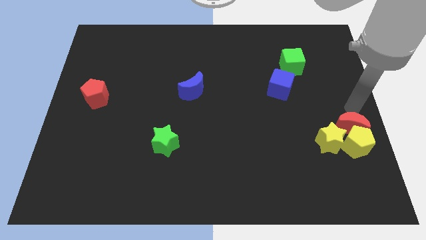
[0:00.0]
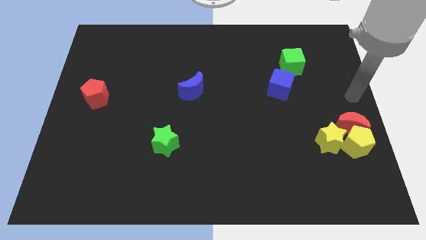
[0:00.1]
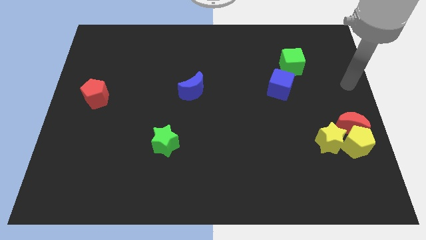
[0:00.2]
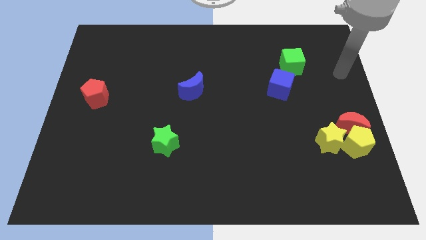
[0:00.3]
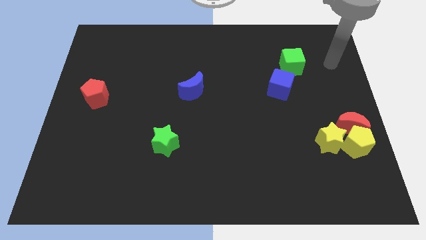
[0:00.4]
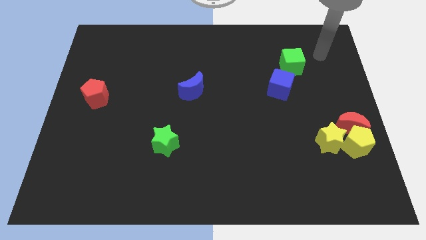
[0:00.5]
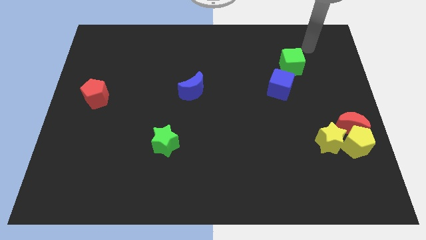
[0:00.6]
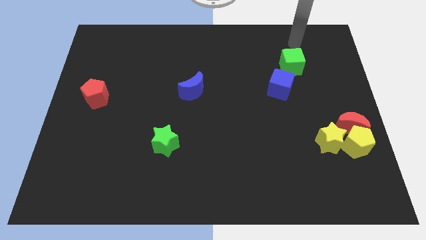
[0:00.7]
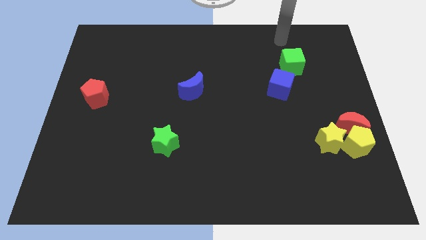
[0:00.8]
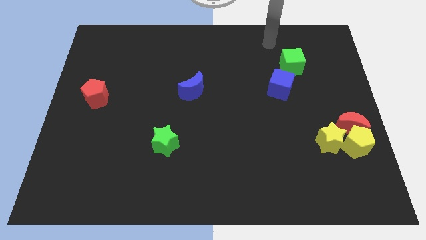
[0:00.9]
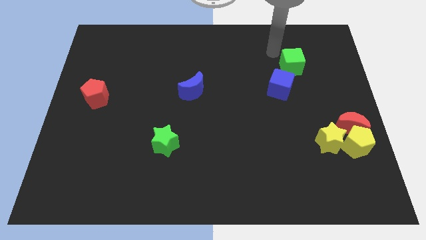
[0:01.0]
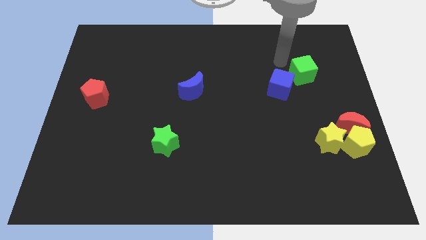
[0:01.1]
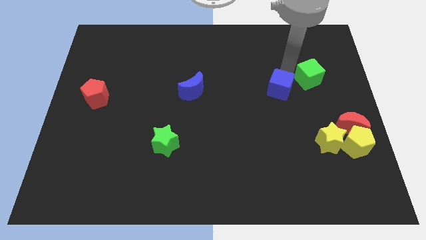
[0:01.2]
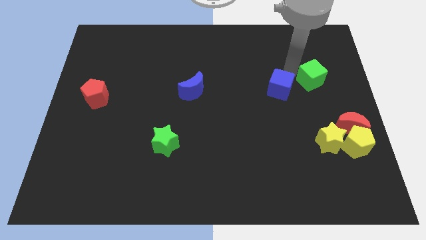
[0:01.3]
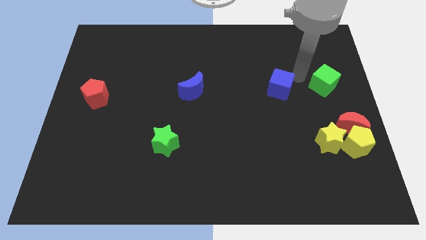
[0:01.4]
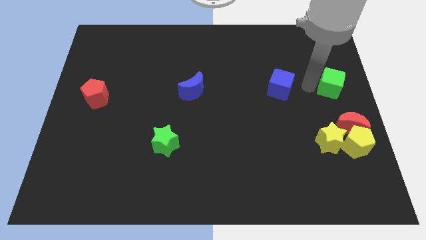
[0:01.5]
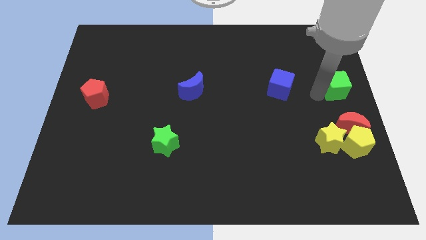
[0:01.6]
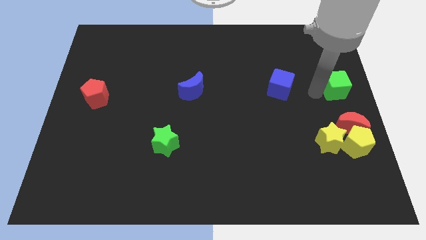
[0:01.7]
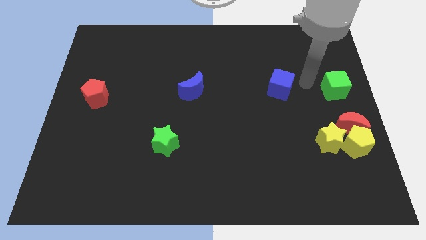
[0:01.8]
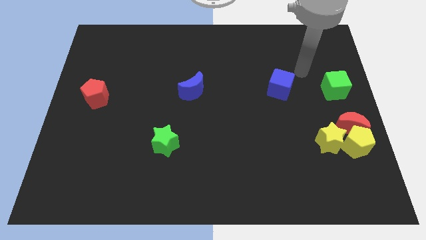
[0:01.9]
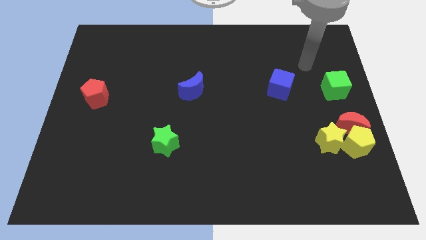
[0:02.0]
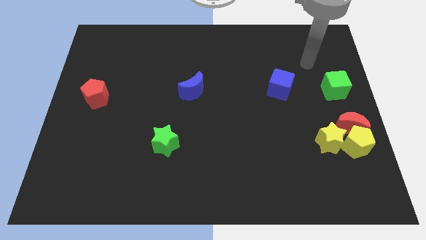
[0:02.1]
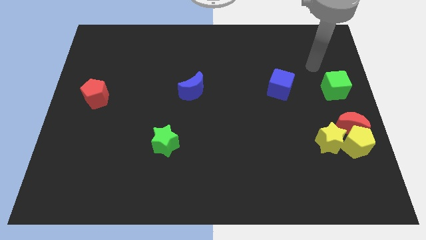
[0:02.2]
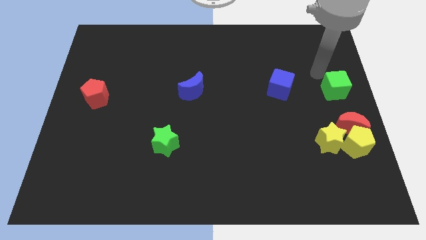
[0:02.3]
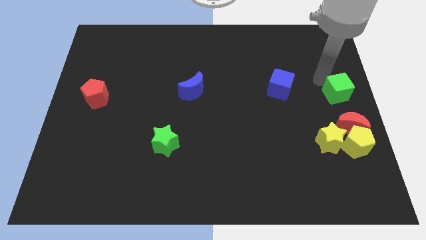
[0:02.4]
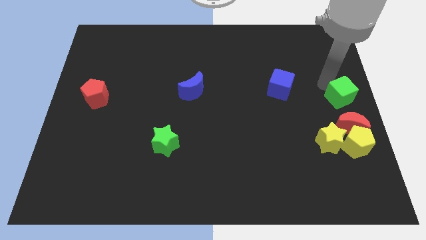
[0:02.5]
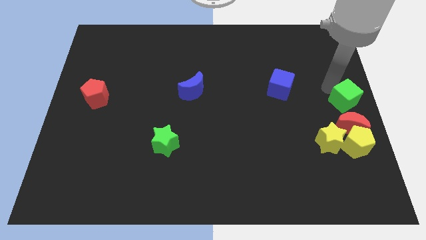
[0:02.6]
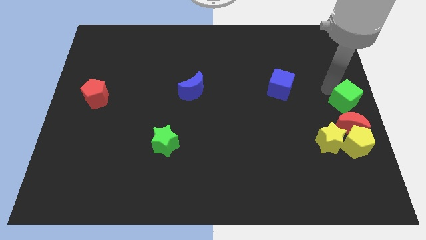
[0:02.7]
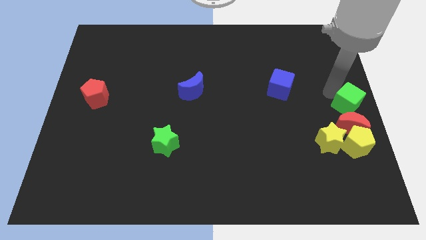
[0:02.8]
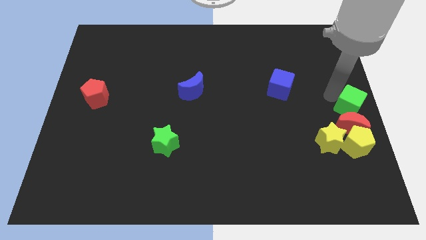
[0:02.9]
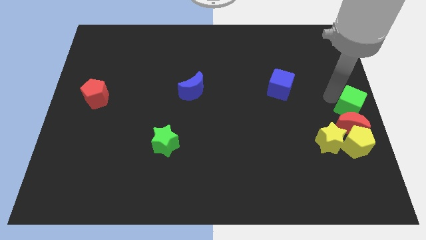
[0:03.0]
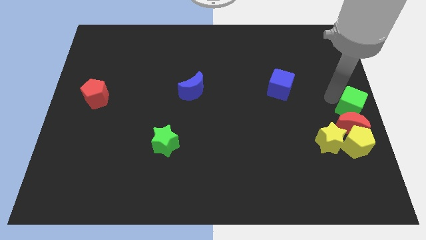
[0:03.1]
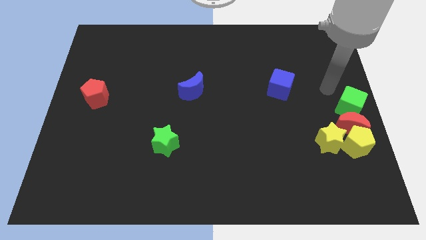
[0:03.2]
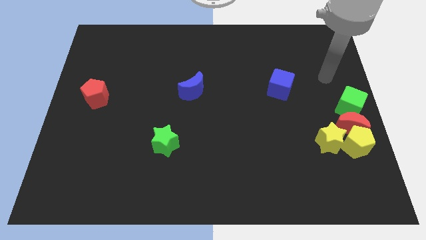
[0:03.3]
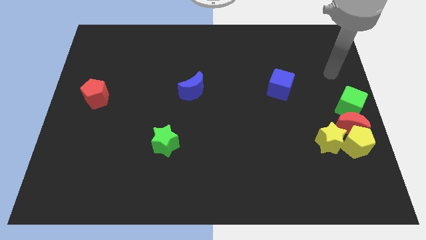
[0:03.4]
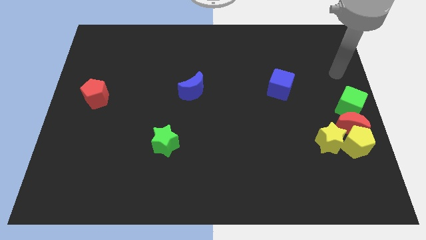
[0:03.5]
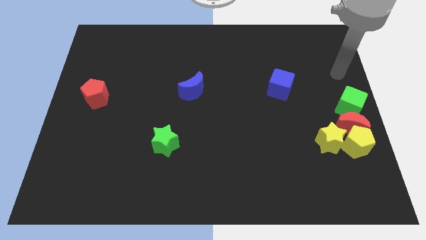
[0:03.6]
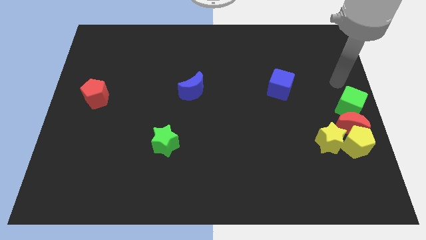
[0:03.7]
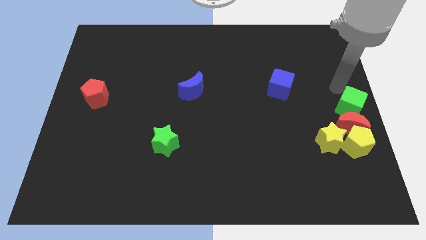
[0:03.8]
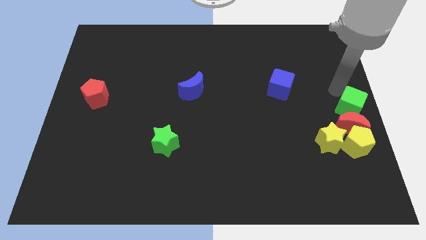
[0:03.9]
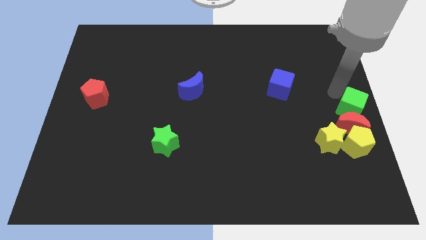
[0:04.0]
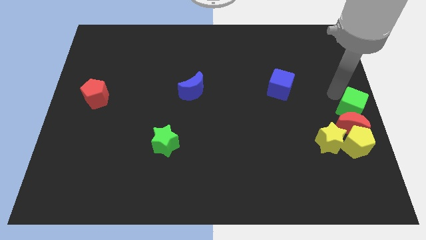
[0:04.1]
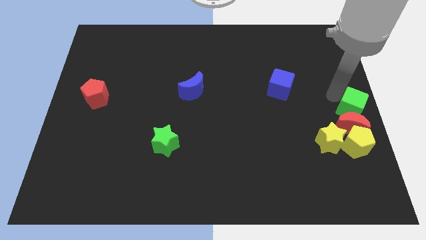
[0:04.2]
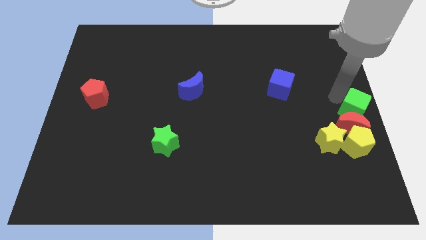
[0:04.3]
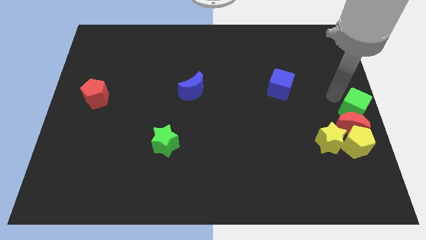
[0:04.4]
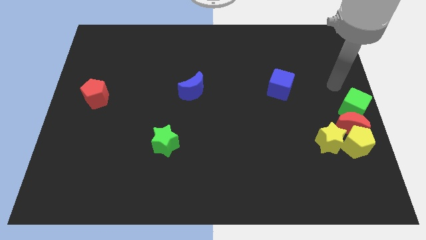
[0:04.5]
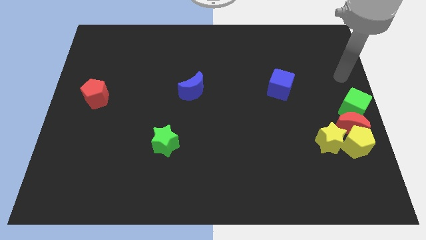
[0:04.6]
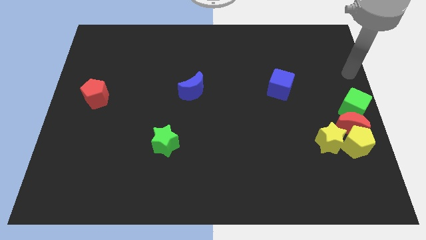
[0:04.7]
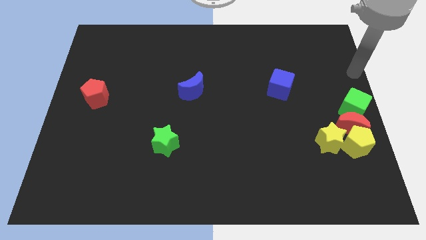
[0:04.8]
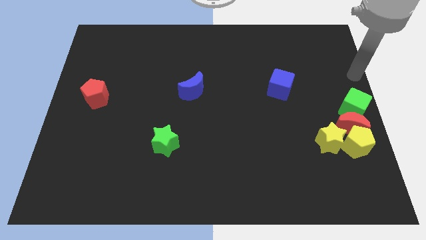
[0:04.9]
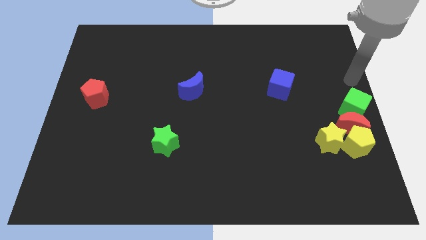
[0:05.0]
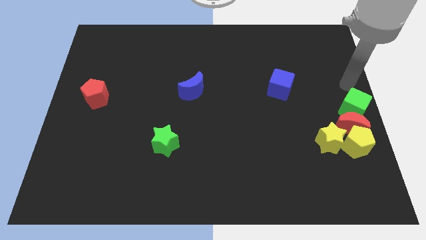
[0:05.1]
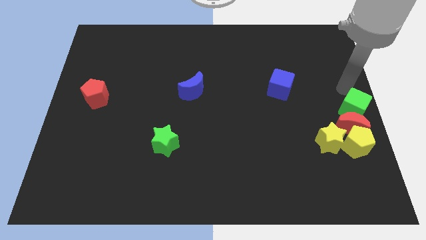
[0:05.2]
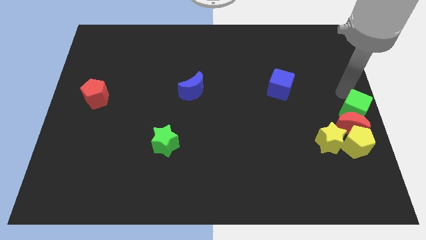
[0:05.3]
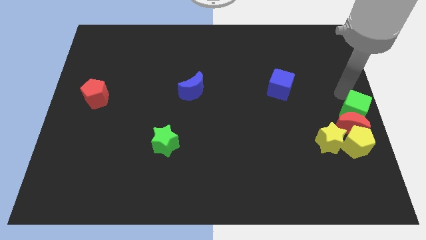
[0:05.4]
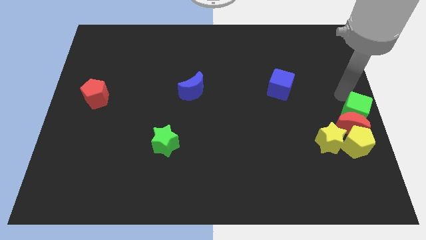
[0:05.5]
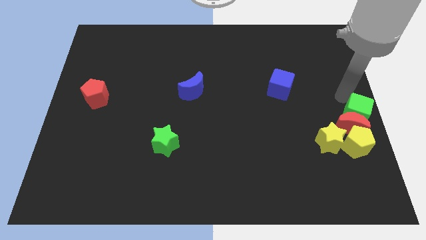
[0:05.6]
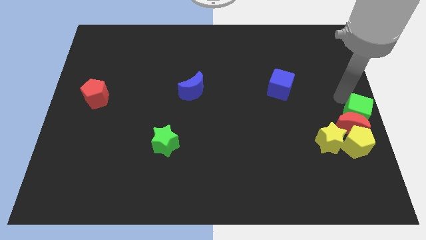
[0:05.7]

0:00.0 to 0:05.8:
slide the green cube into the top side of the red crescent

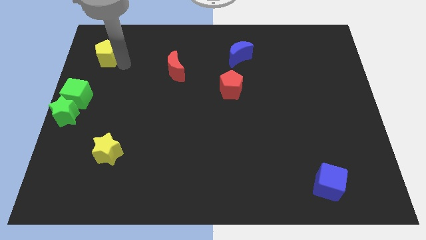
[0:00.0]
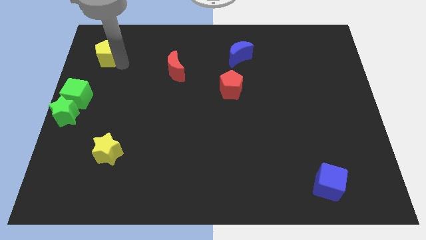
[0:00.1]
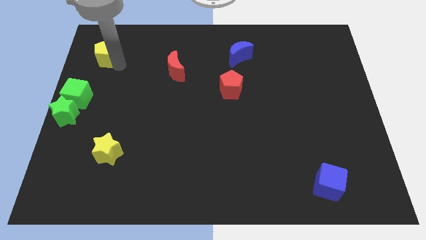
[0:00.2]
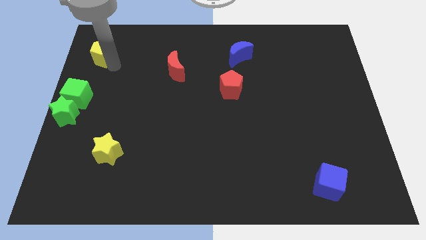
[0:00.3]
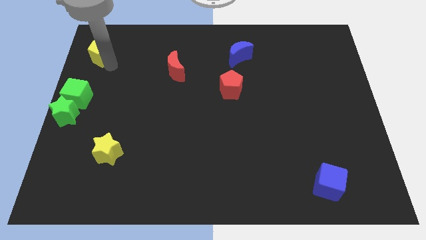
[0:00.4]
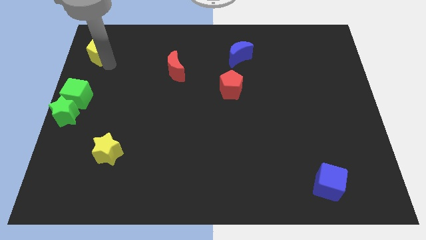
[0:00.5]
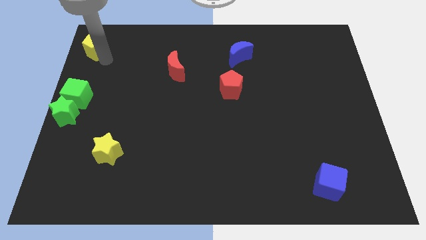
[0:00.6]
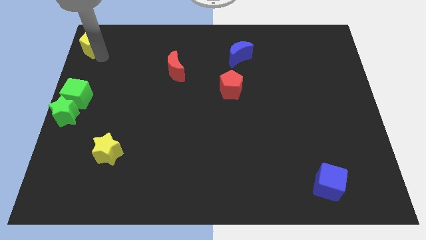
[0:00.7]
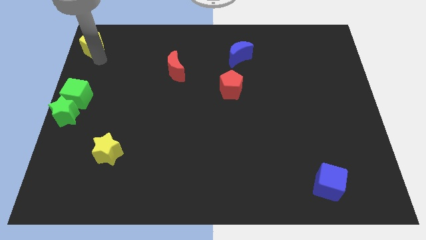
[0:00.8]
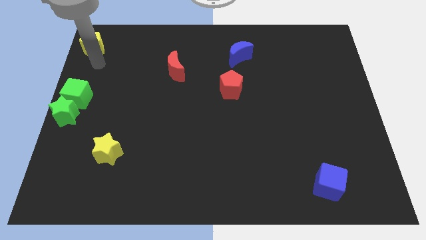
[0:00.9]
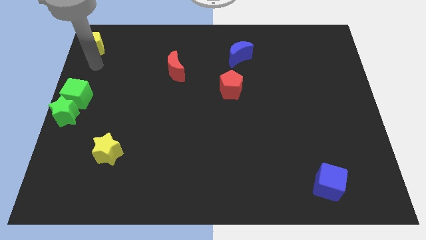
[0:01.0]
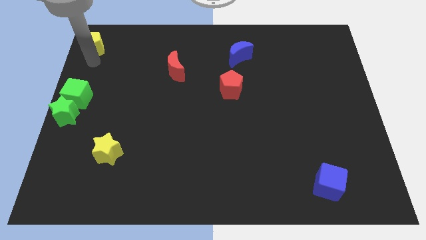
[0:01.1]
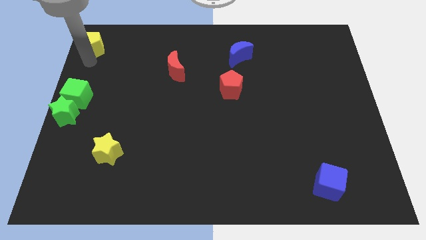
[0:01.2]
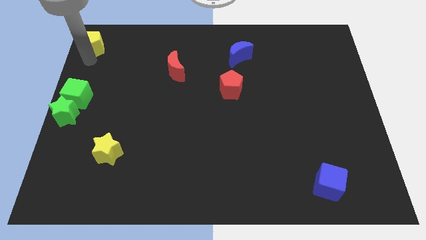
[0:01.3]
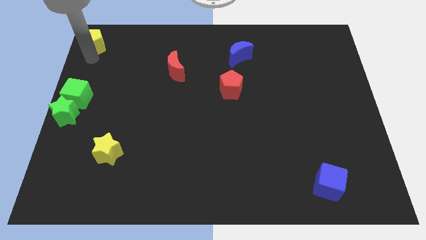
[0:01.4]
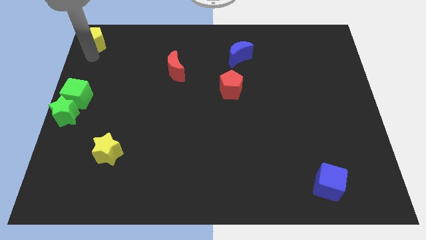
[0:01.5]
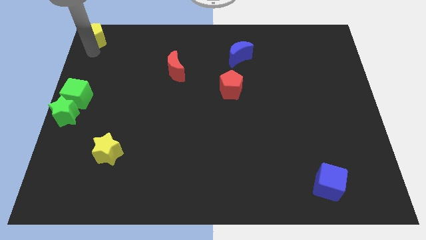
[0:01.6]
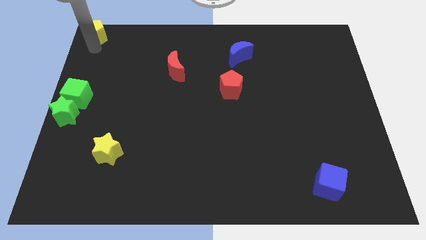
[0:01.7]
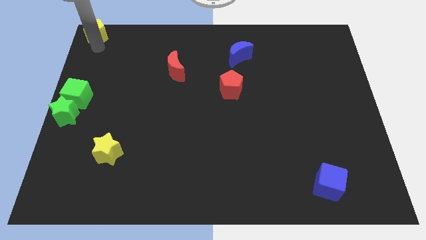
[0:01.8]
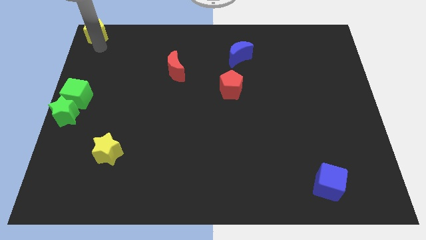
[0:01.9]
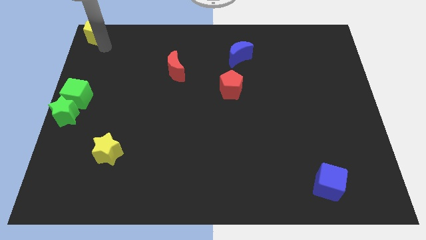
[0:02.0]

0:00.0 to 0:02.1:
place the yellow pentagon at the top left corner of the board

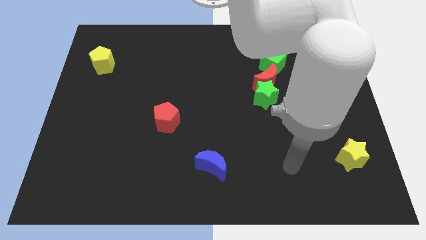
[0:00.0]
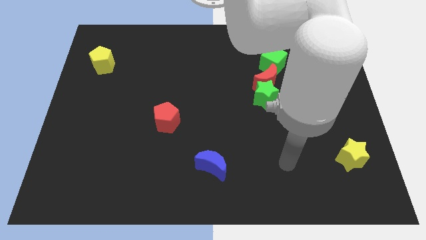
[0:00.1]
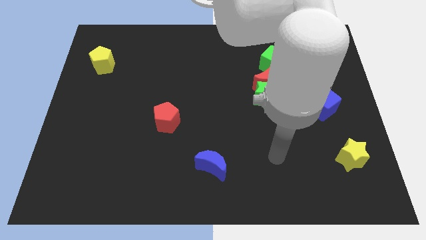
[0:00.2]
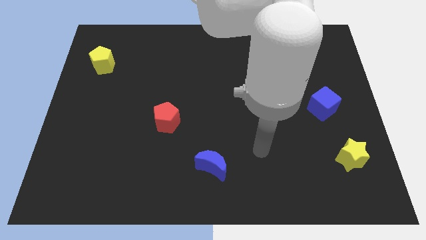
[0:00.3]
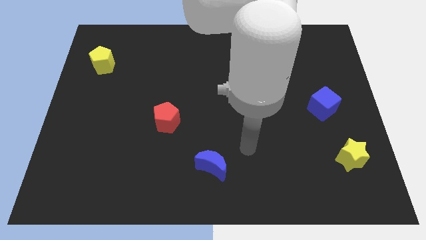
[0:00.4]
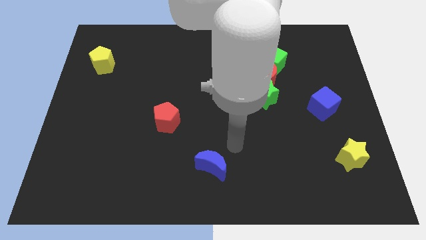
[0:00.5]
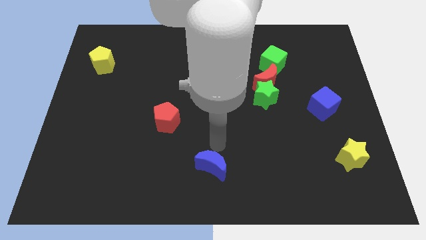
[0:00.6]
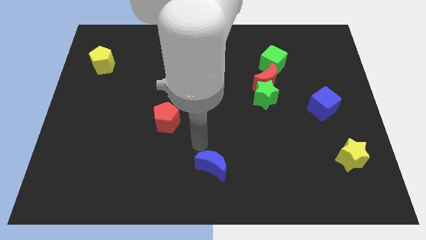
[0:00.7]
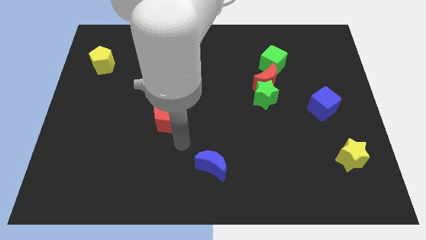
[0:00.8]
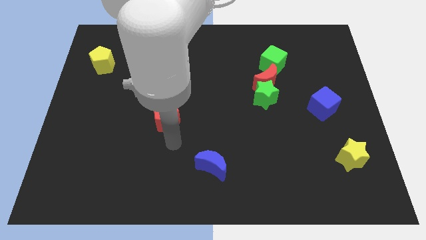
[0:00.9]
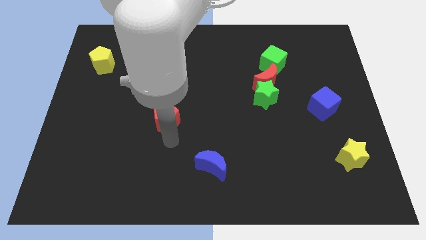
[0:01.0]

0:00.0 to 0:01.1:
point your arm at the bottom side of the red pentagon
